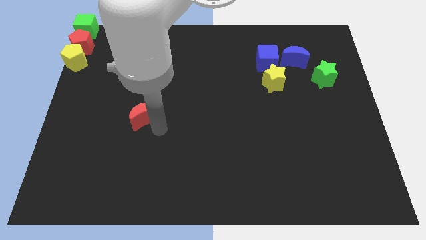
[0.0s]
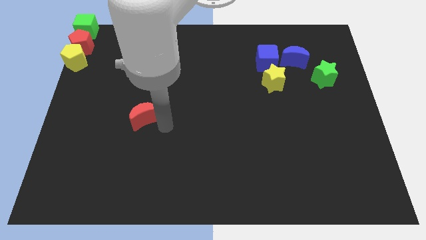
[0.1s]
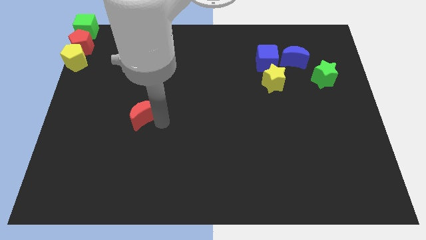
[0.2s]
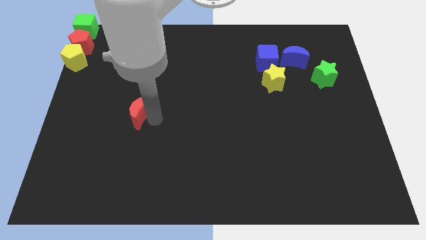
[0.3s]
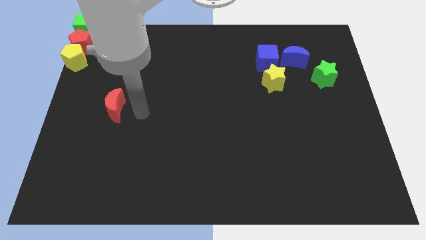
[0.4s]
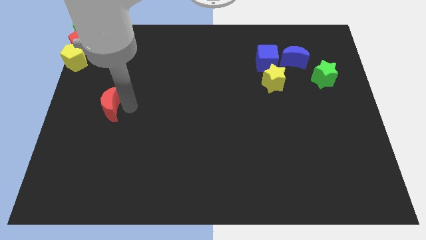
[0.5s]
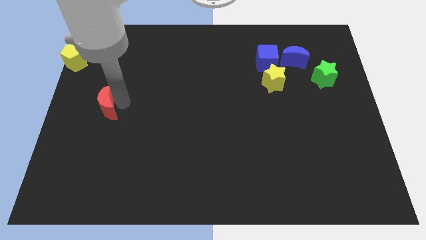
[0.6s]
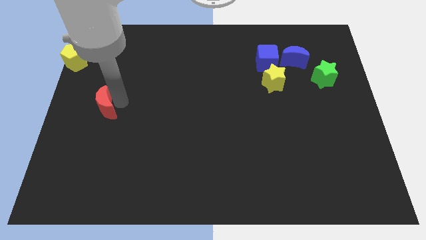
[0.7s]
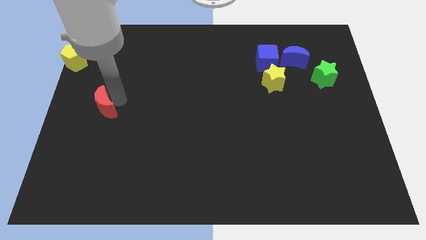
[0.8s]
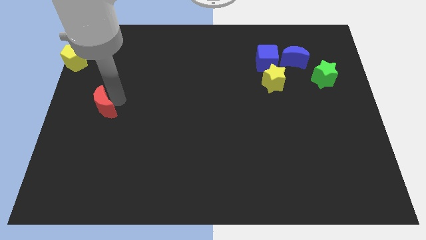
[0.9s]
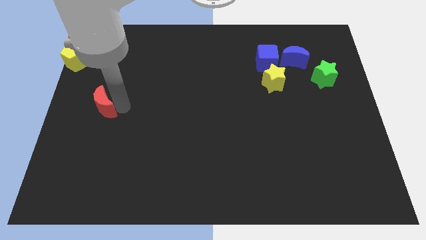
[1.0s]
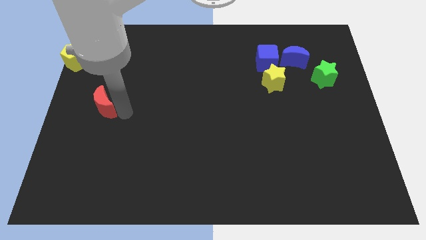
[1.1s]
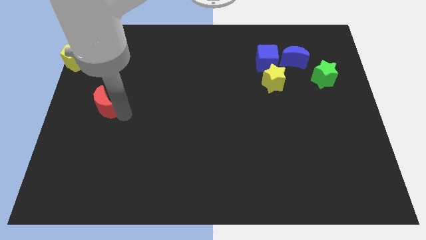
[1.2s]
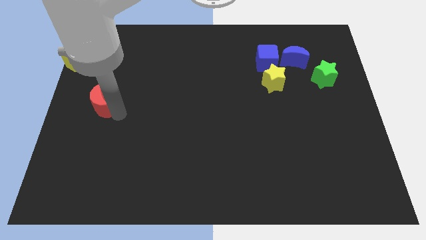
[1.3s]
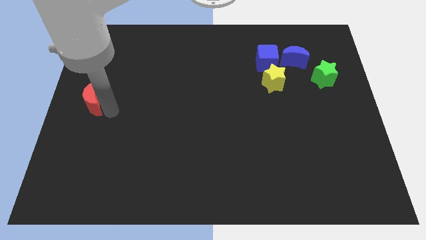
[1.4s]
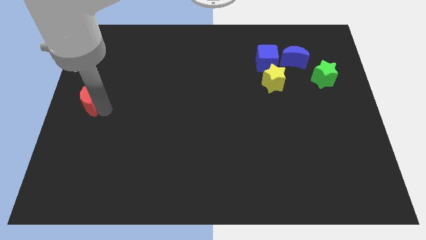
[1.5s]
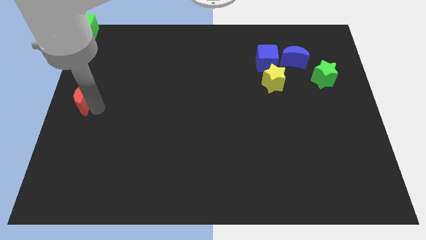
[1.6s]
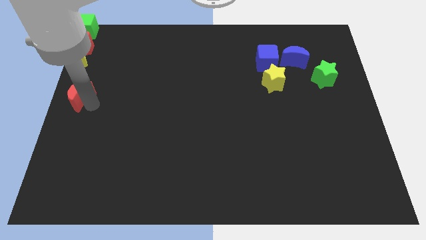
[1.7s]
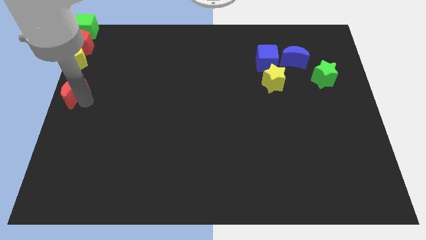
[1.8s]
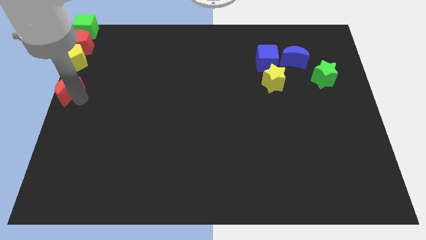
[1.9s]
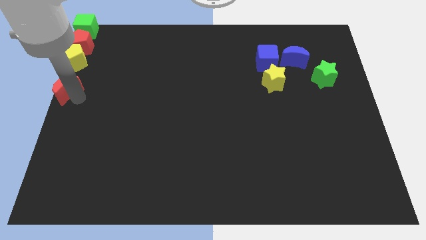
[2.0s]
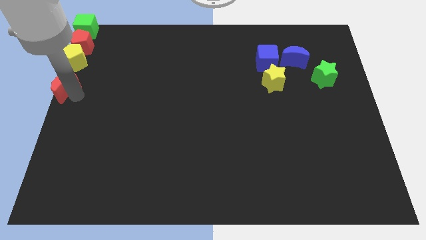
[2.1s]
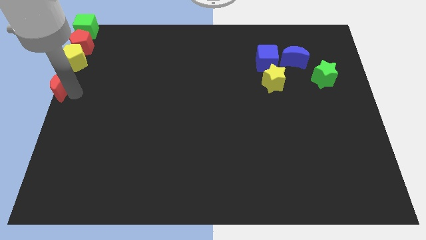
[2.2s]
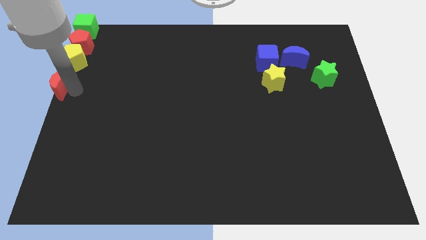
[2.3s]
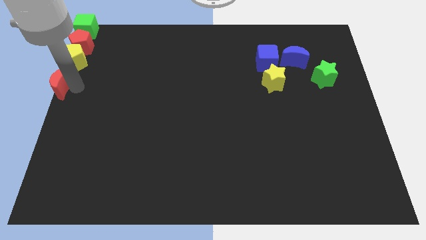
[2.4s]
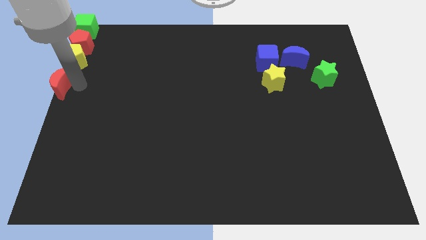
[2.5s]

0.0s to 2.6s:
push the red crescent to the bottom of the yellow pentagon

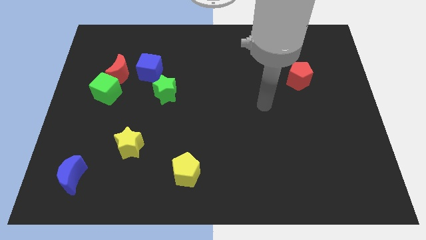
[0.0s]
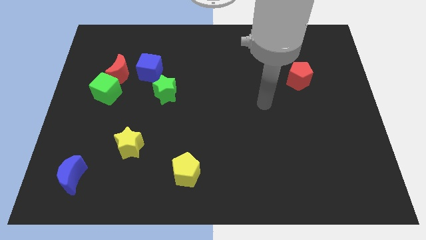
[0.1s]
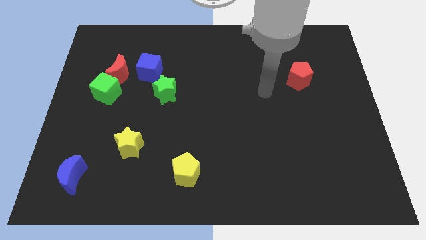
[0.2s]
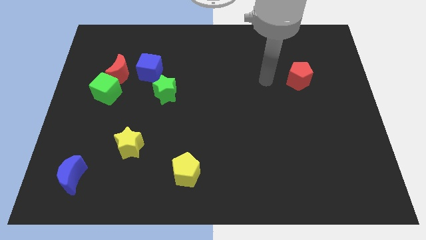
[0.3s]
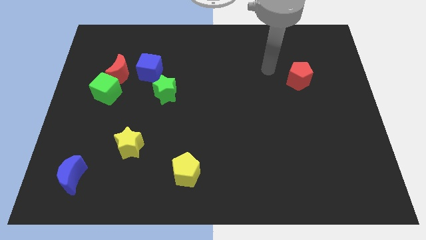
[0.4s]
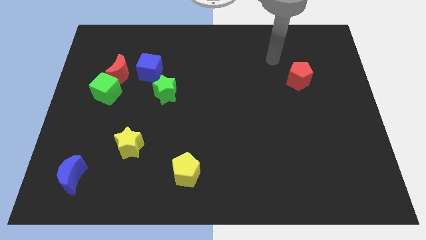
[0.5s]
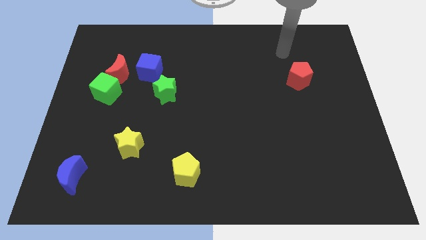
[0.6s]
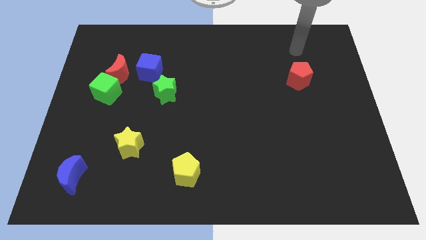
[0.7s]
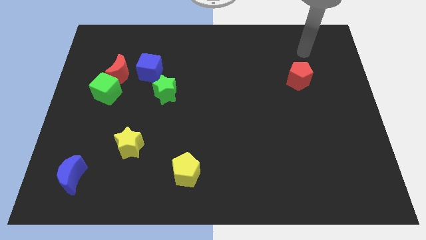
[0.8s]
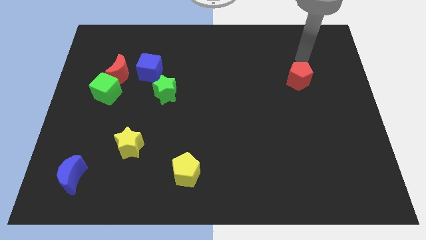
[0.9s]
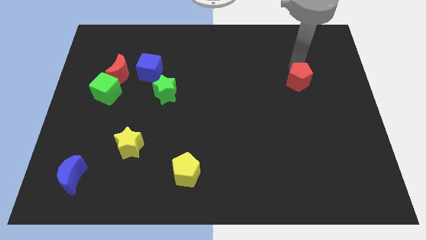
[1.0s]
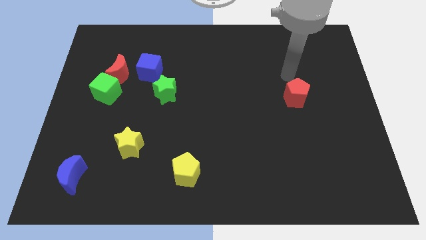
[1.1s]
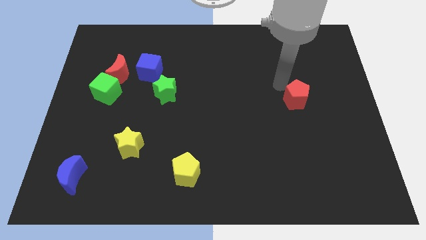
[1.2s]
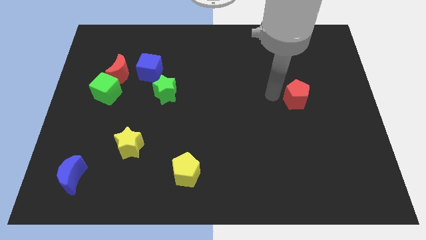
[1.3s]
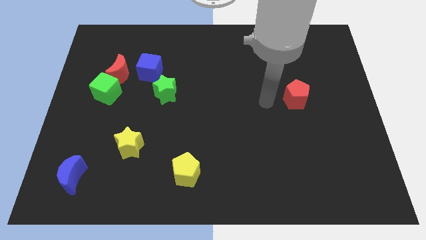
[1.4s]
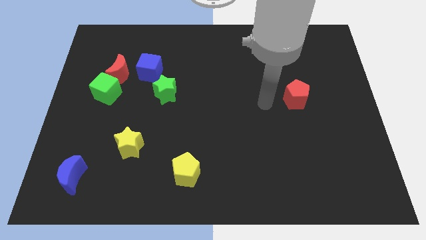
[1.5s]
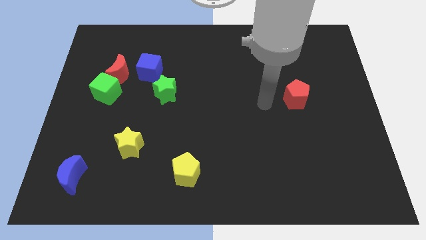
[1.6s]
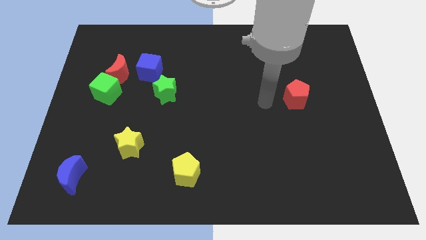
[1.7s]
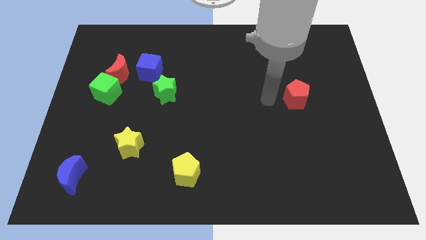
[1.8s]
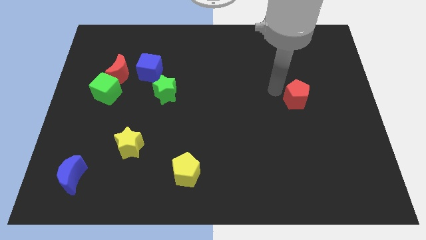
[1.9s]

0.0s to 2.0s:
move the red pentagon down slightly

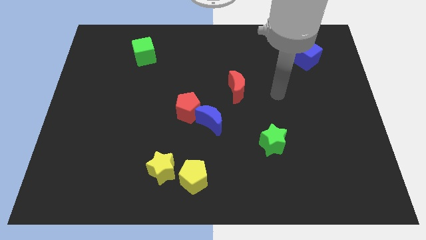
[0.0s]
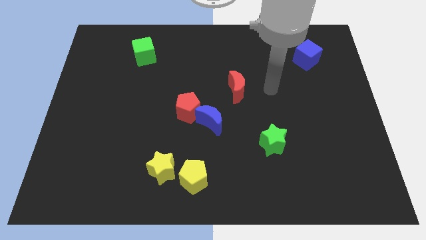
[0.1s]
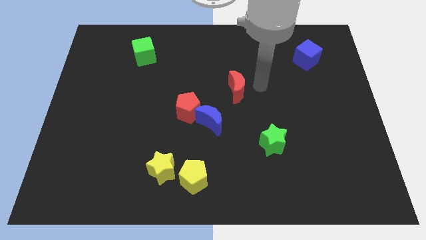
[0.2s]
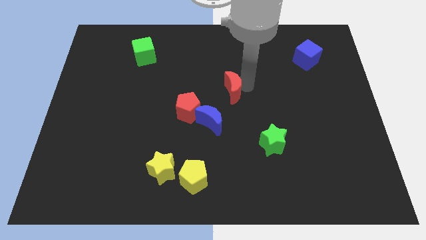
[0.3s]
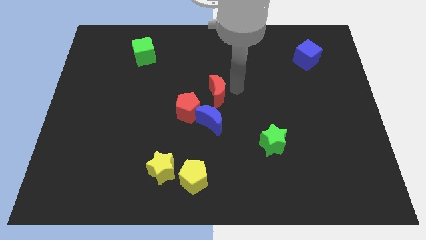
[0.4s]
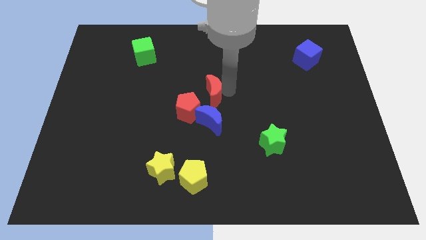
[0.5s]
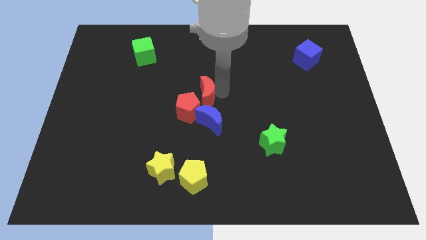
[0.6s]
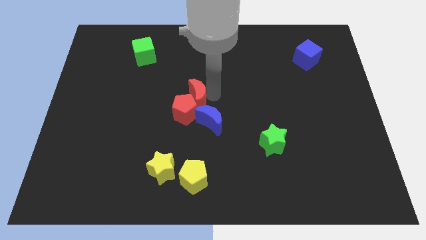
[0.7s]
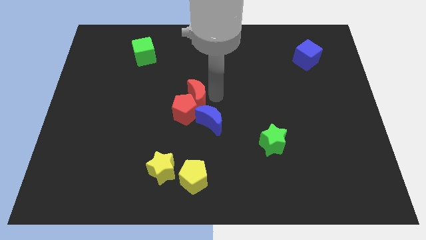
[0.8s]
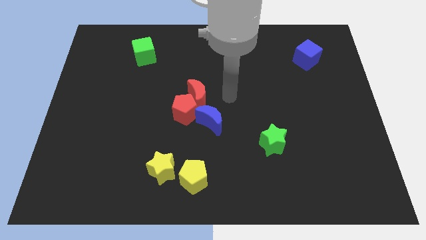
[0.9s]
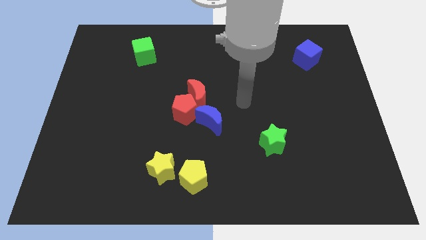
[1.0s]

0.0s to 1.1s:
move the red crescent into the red pentagon

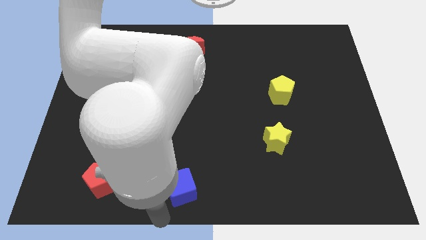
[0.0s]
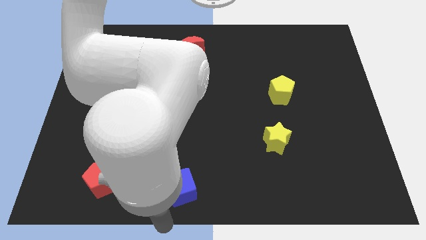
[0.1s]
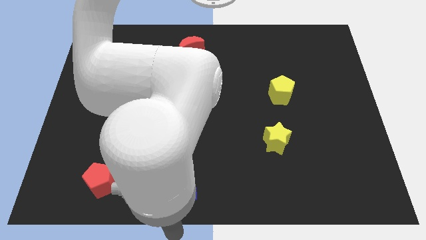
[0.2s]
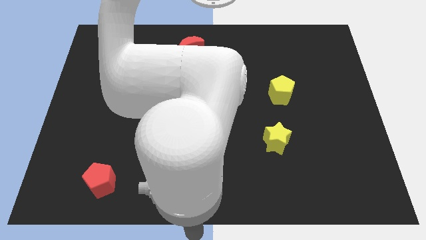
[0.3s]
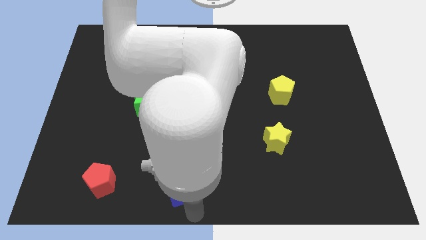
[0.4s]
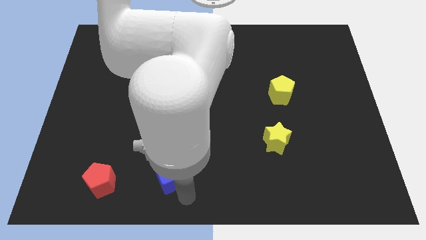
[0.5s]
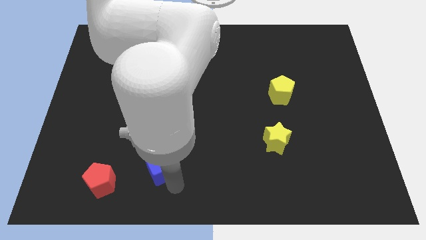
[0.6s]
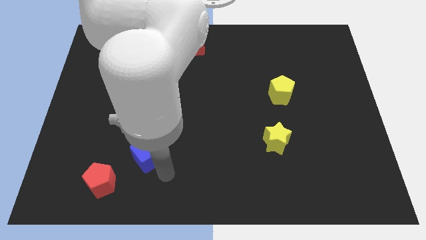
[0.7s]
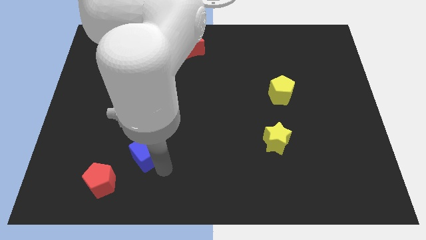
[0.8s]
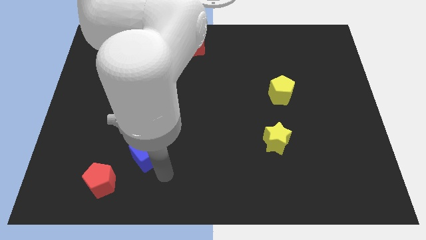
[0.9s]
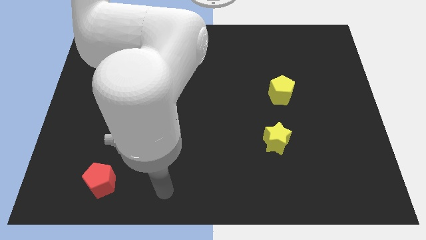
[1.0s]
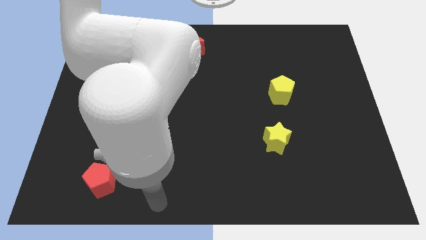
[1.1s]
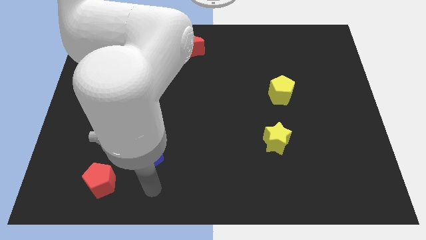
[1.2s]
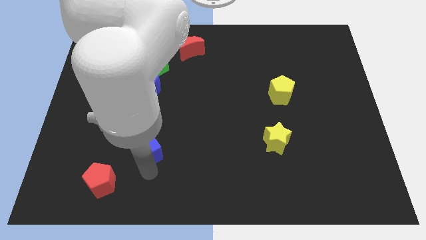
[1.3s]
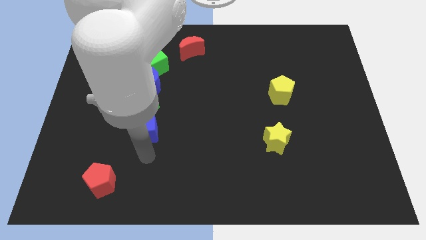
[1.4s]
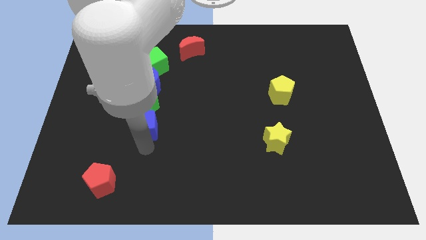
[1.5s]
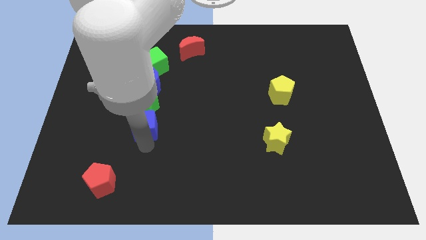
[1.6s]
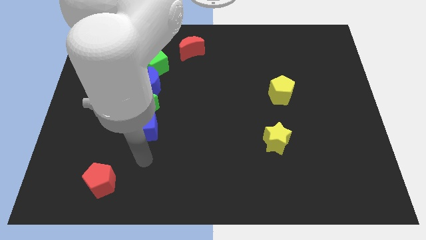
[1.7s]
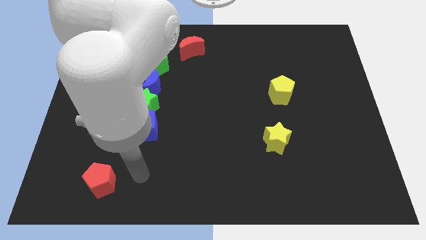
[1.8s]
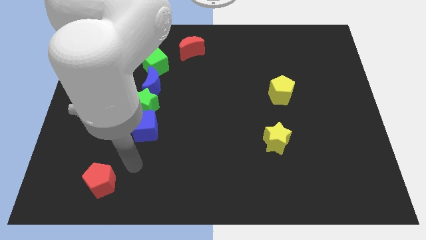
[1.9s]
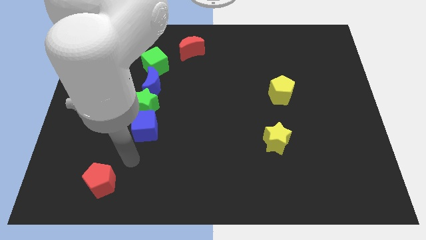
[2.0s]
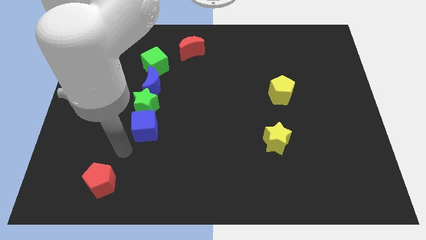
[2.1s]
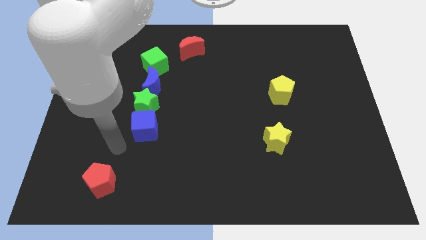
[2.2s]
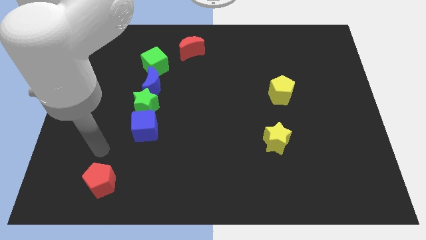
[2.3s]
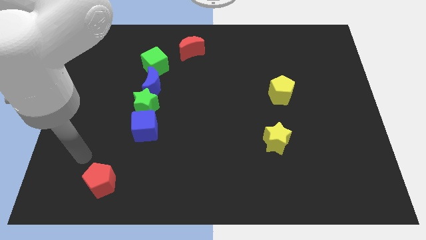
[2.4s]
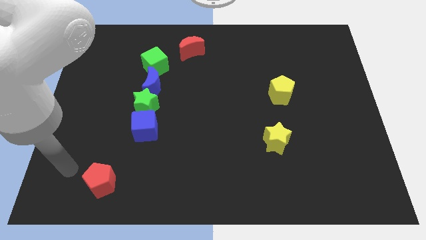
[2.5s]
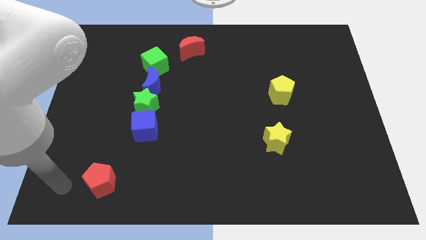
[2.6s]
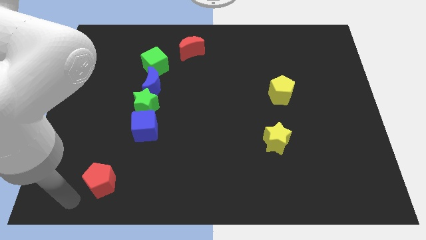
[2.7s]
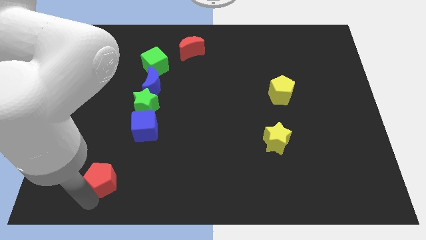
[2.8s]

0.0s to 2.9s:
move blue cube below the green star

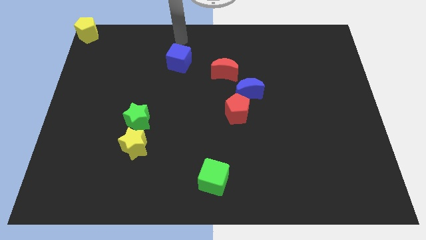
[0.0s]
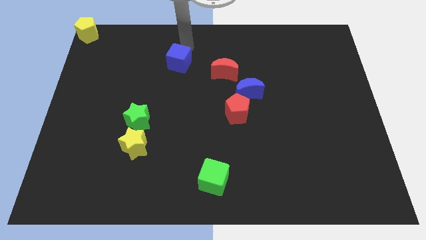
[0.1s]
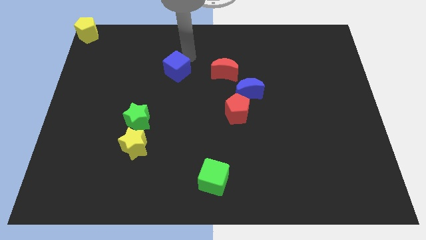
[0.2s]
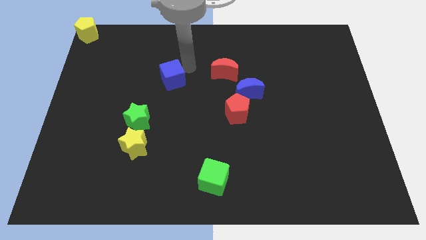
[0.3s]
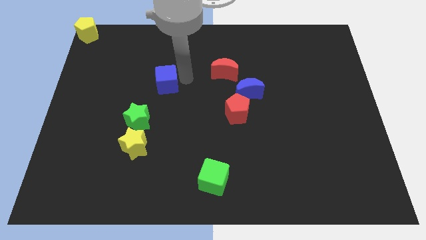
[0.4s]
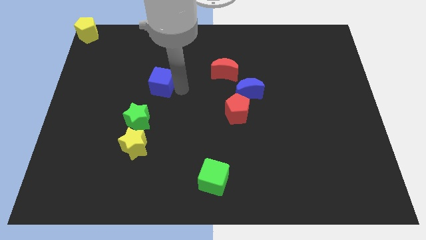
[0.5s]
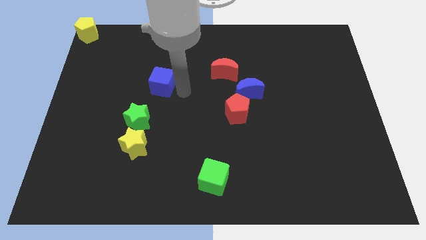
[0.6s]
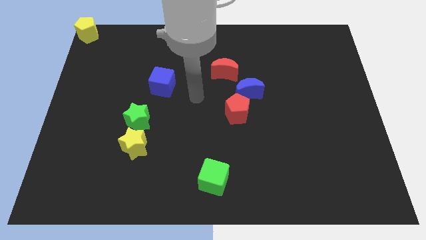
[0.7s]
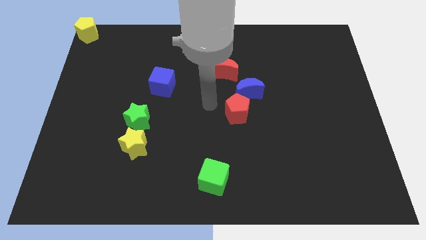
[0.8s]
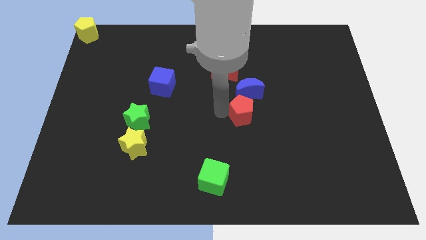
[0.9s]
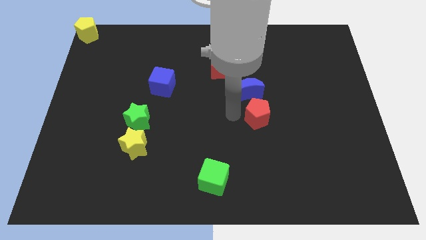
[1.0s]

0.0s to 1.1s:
place red pentagon below blue crescent
